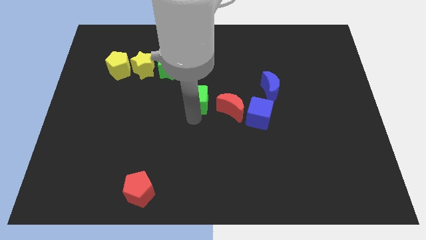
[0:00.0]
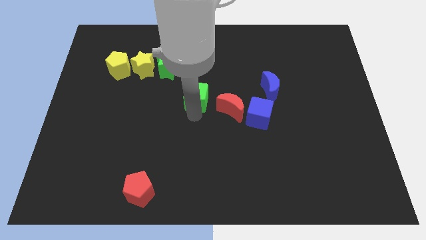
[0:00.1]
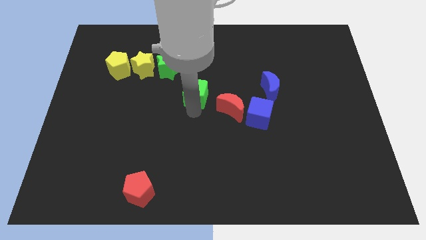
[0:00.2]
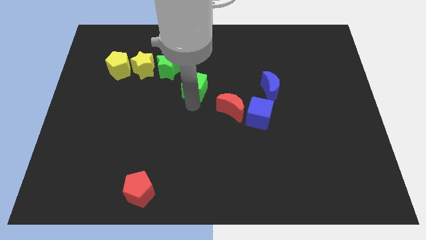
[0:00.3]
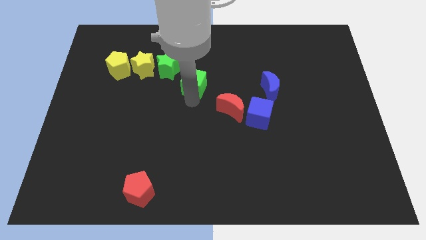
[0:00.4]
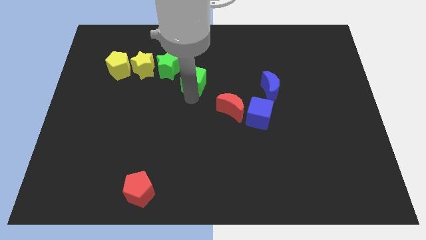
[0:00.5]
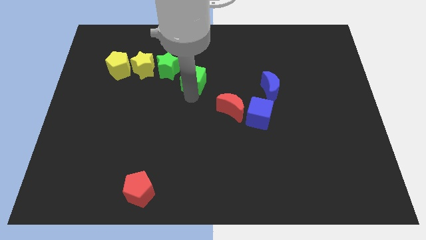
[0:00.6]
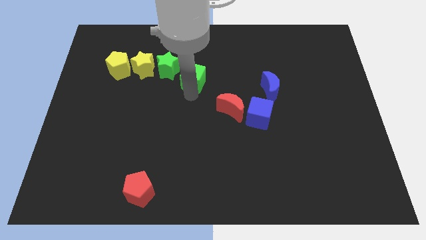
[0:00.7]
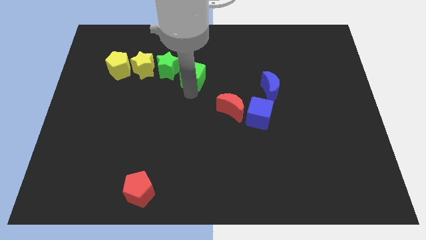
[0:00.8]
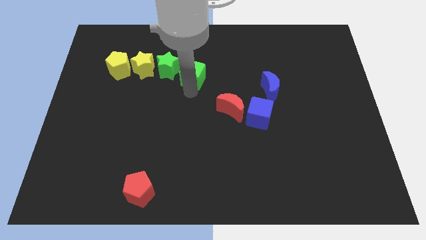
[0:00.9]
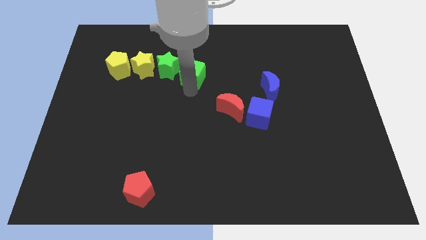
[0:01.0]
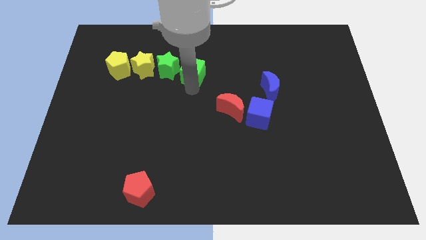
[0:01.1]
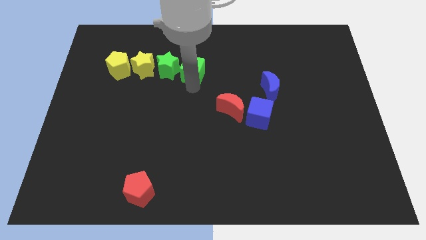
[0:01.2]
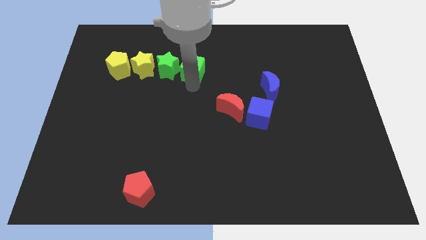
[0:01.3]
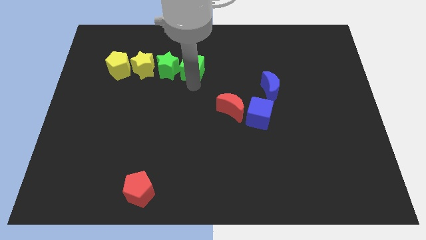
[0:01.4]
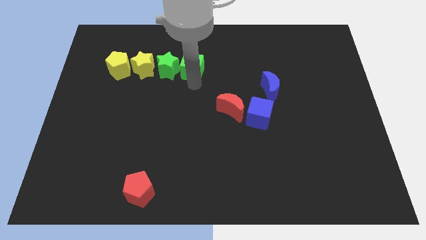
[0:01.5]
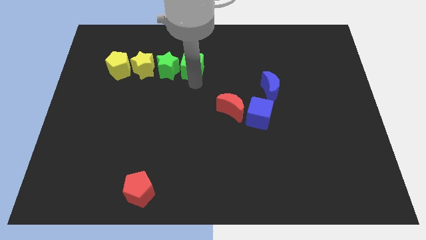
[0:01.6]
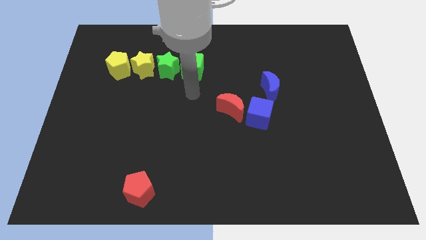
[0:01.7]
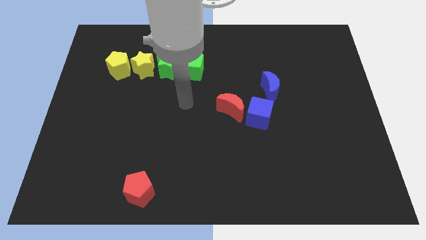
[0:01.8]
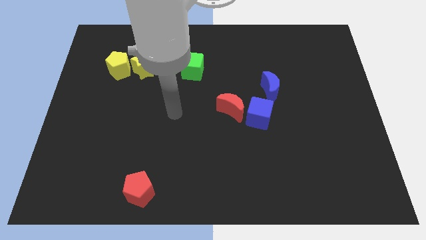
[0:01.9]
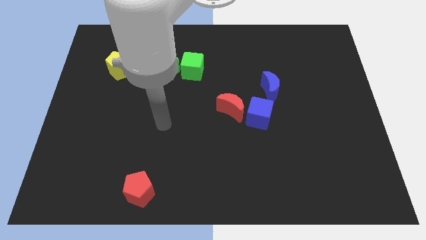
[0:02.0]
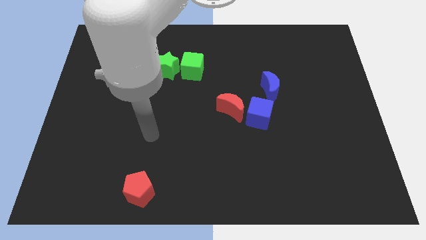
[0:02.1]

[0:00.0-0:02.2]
place the green cube to the right of the green star

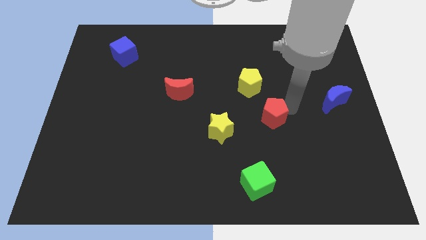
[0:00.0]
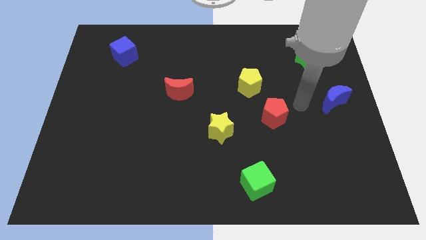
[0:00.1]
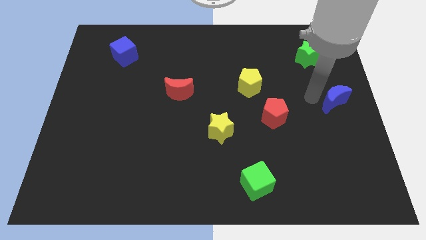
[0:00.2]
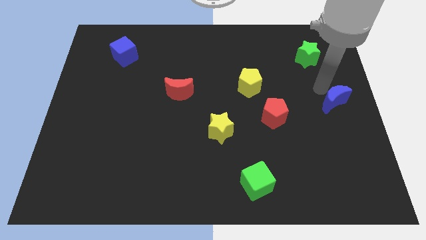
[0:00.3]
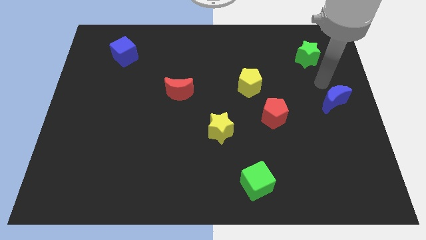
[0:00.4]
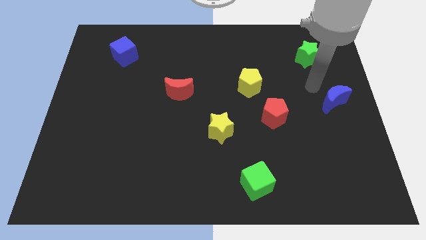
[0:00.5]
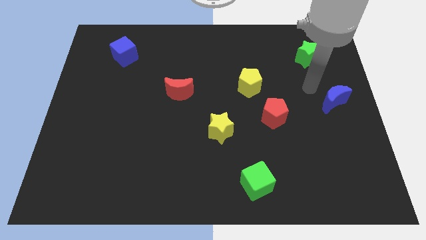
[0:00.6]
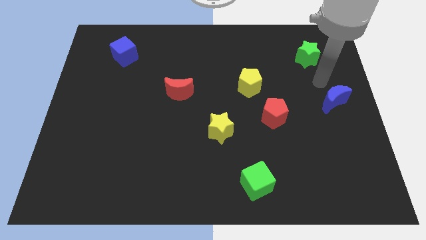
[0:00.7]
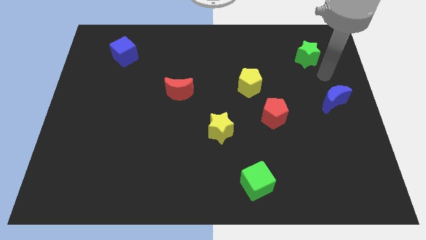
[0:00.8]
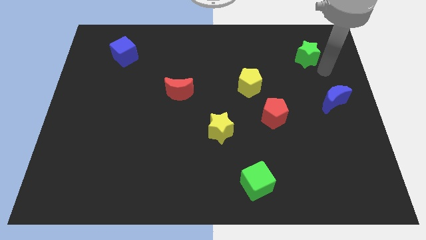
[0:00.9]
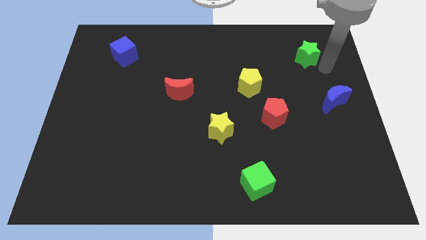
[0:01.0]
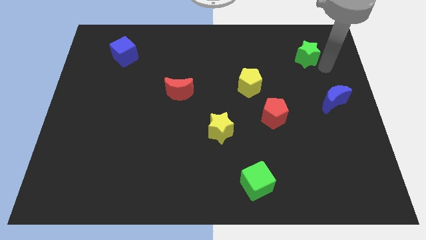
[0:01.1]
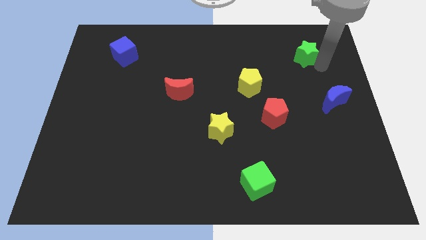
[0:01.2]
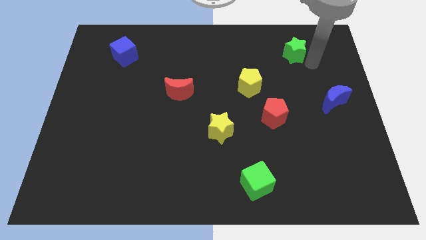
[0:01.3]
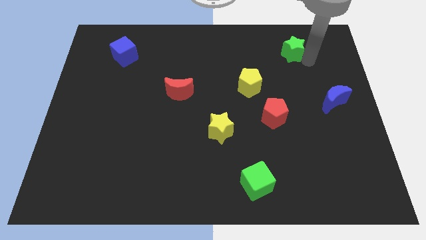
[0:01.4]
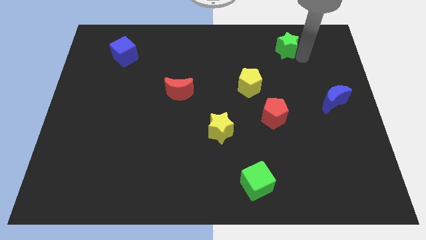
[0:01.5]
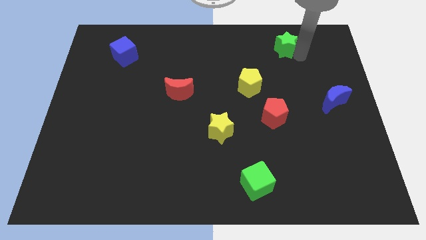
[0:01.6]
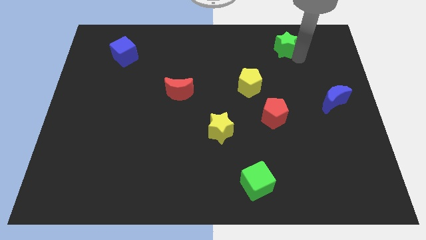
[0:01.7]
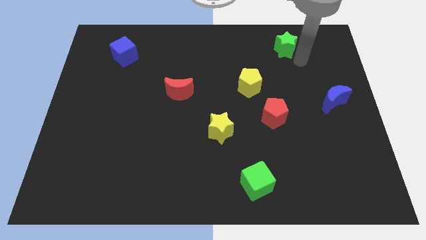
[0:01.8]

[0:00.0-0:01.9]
slide the green star towards the top center

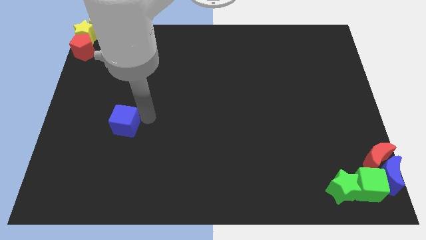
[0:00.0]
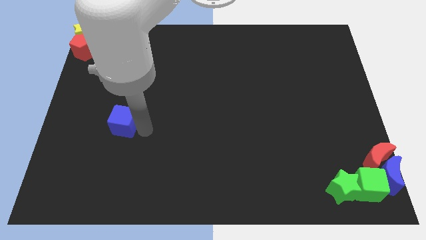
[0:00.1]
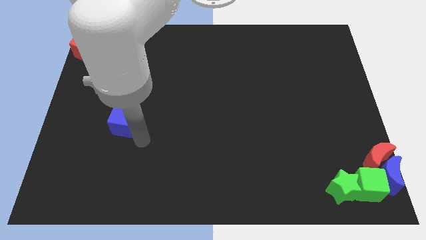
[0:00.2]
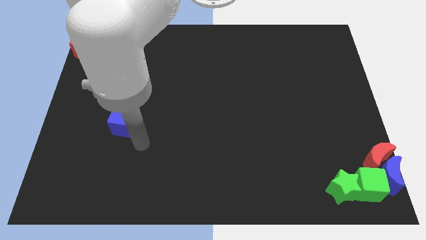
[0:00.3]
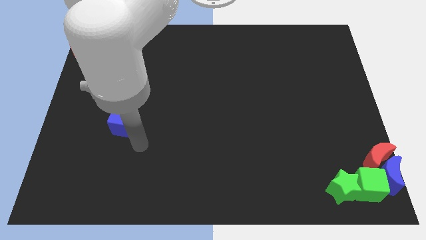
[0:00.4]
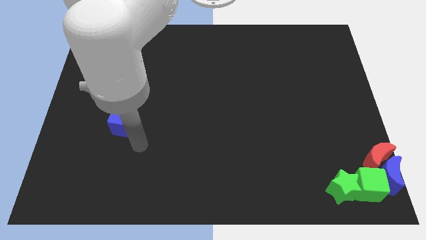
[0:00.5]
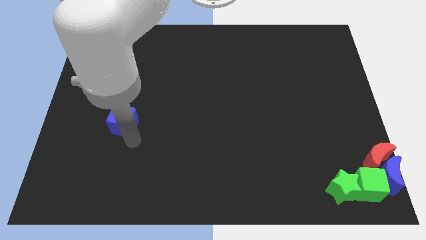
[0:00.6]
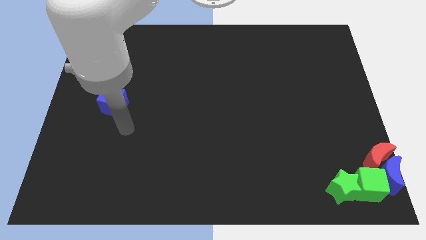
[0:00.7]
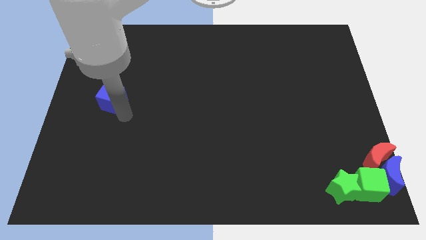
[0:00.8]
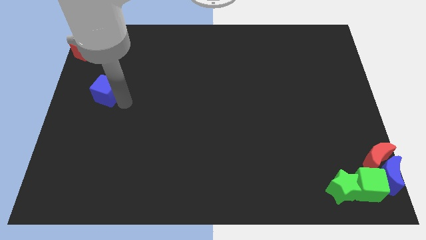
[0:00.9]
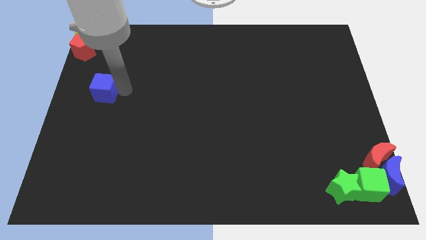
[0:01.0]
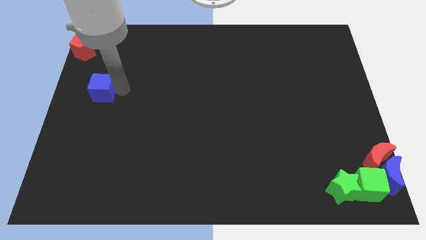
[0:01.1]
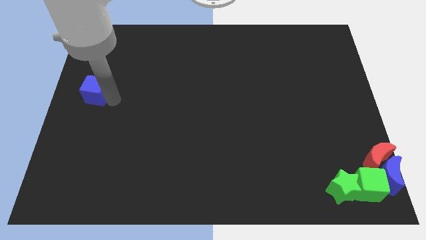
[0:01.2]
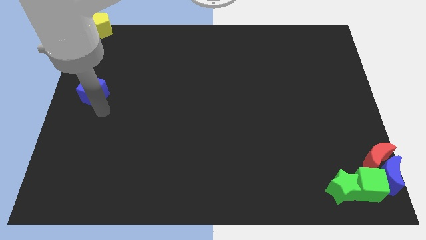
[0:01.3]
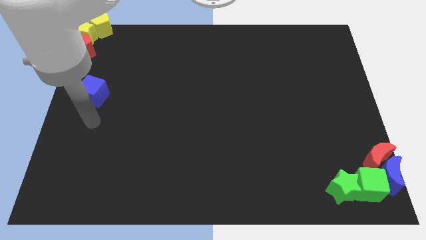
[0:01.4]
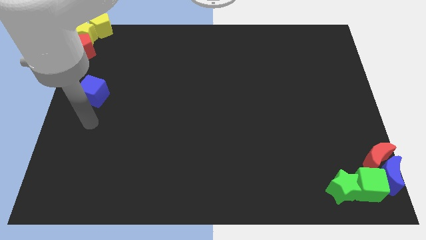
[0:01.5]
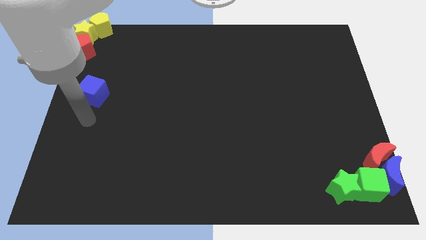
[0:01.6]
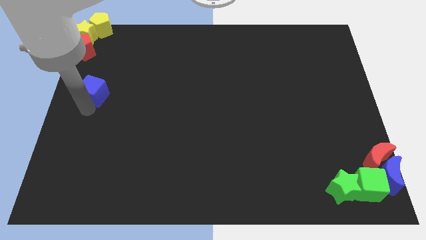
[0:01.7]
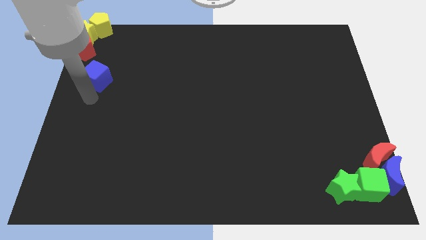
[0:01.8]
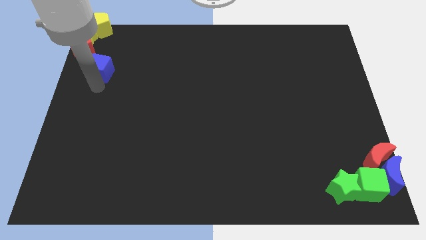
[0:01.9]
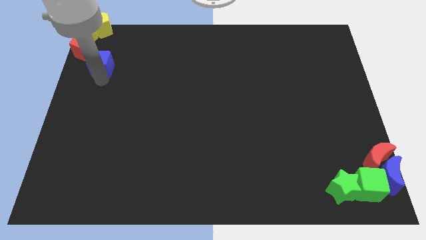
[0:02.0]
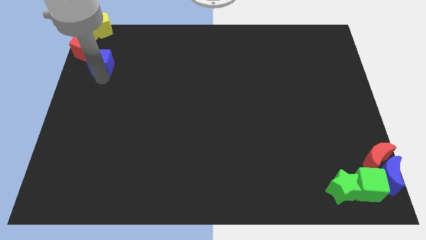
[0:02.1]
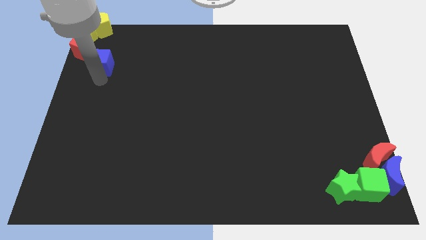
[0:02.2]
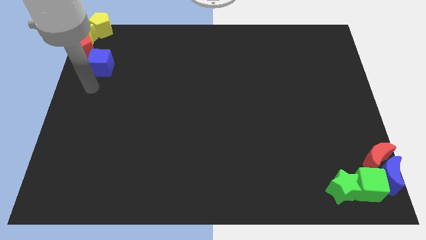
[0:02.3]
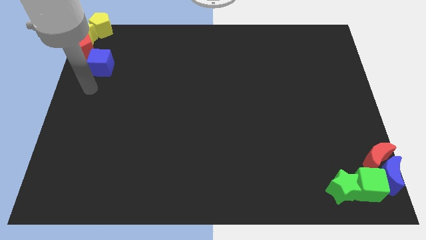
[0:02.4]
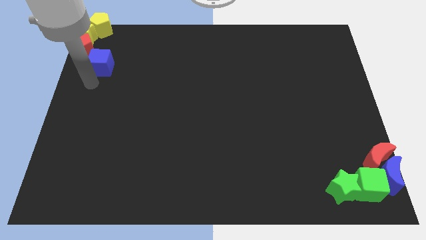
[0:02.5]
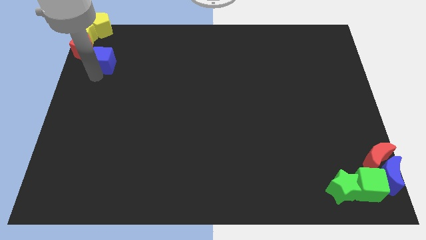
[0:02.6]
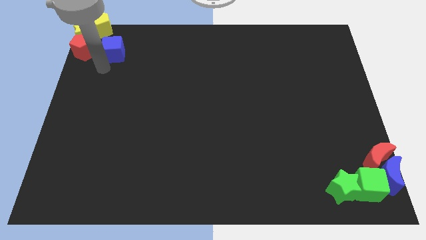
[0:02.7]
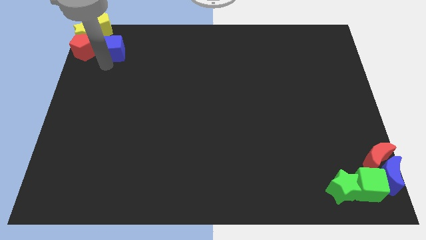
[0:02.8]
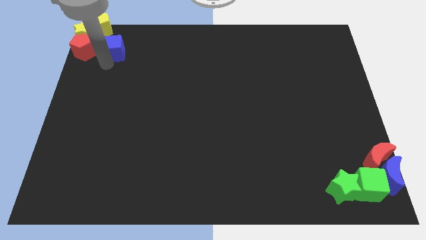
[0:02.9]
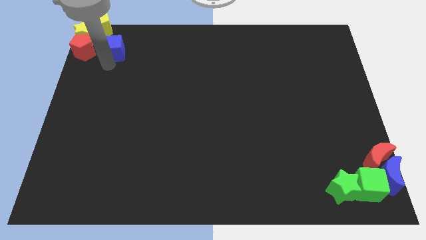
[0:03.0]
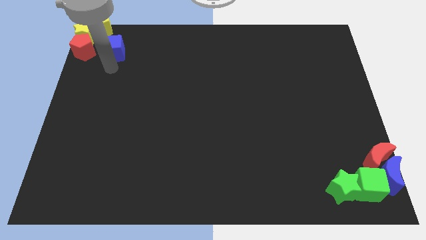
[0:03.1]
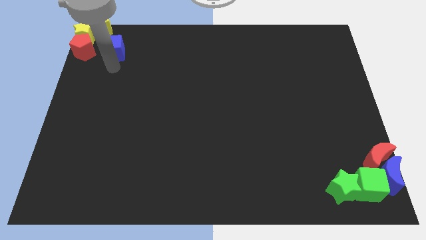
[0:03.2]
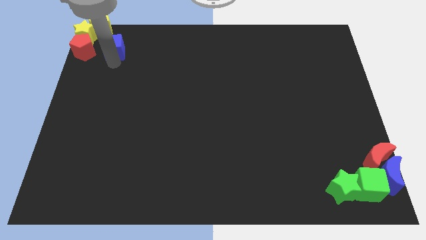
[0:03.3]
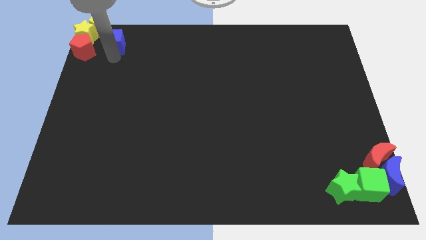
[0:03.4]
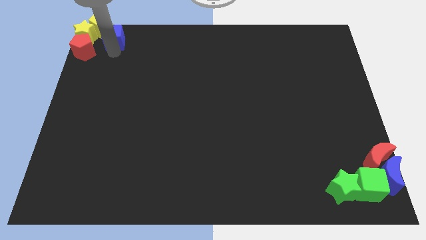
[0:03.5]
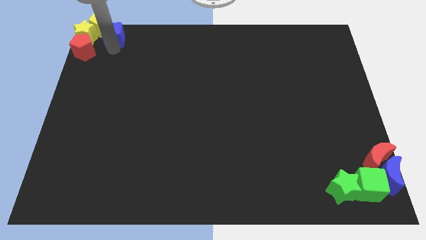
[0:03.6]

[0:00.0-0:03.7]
push blue cube right to the yellow star

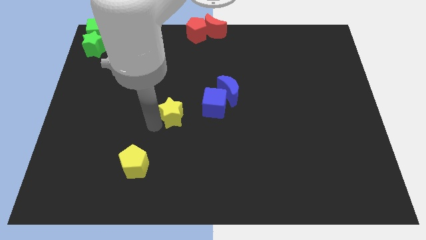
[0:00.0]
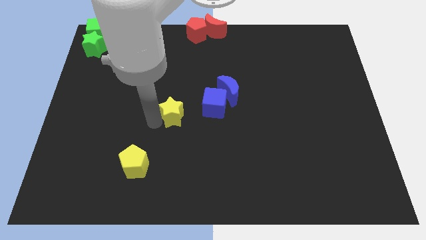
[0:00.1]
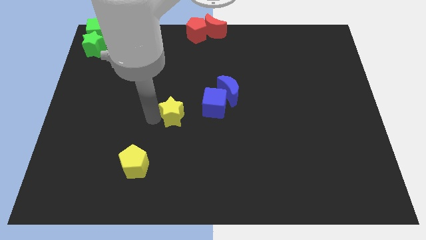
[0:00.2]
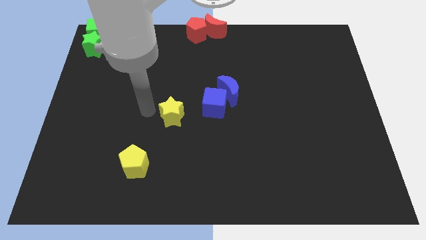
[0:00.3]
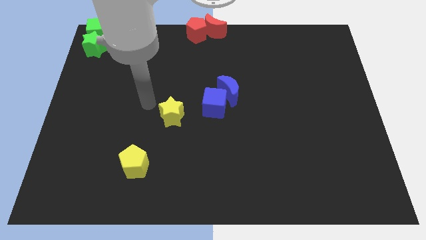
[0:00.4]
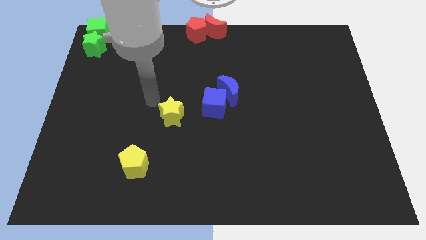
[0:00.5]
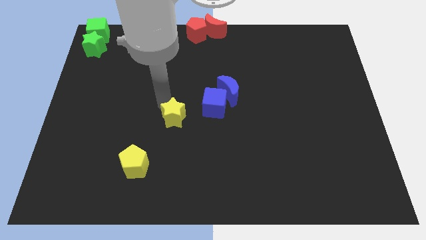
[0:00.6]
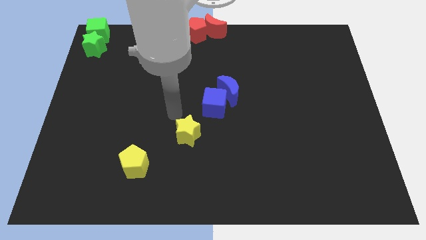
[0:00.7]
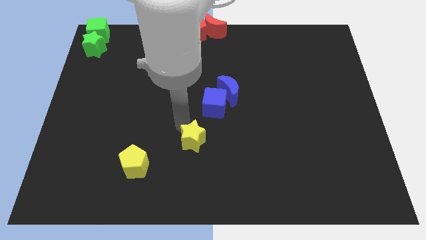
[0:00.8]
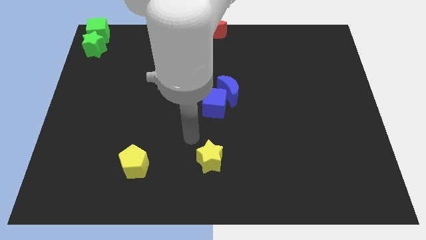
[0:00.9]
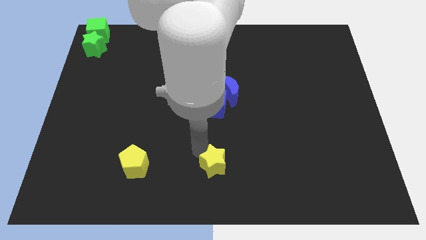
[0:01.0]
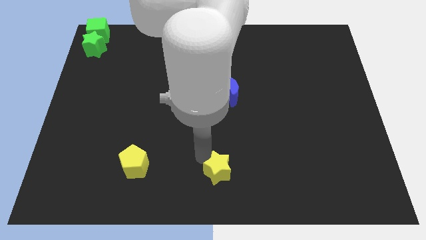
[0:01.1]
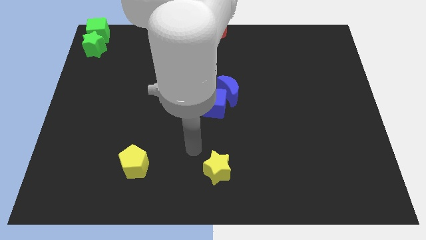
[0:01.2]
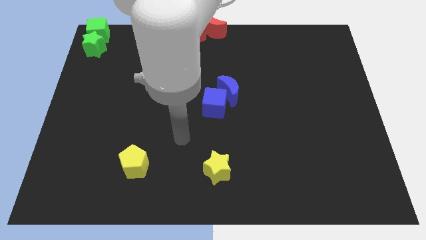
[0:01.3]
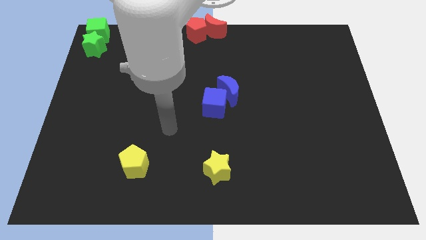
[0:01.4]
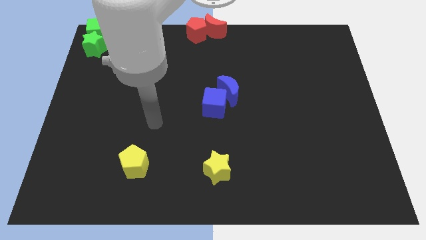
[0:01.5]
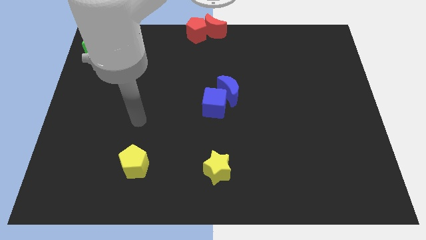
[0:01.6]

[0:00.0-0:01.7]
move the yellow star down to the blue cube
